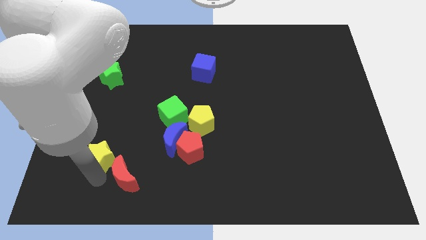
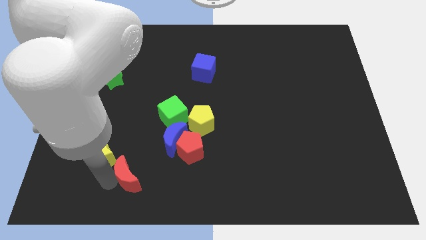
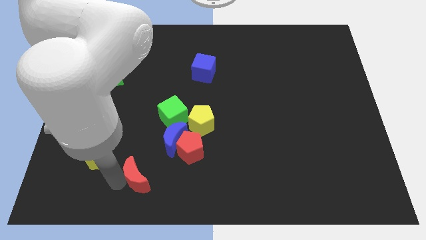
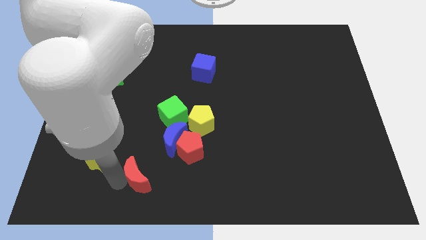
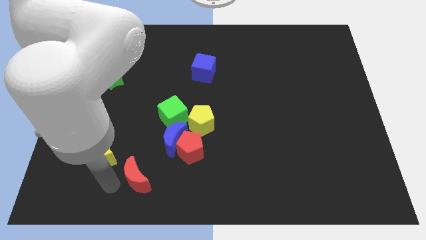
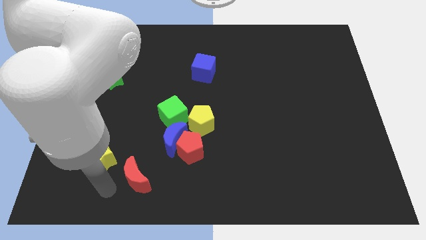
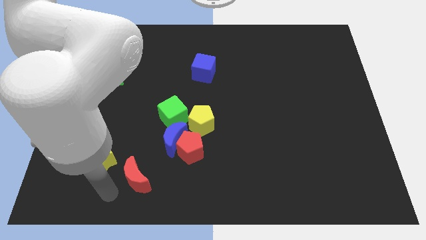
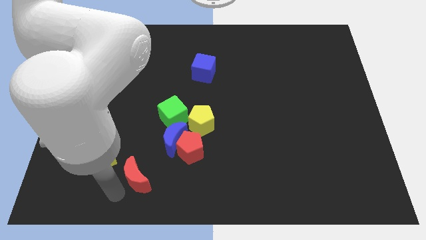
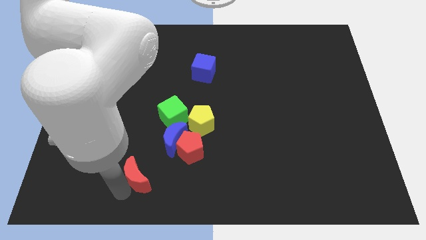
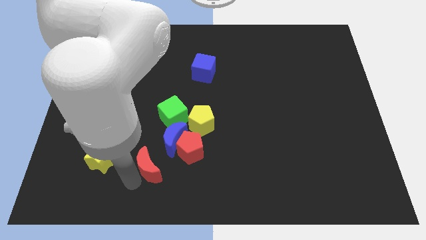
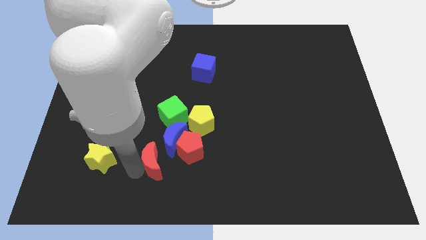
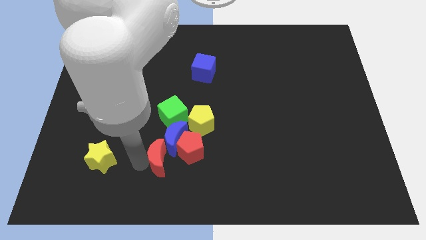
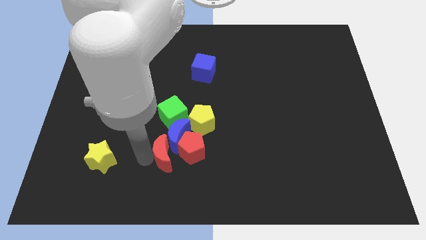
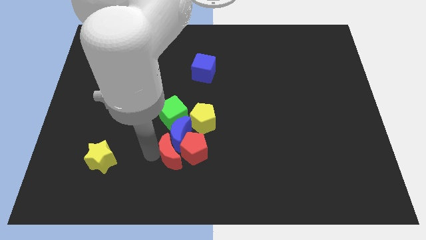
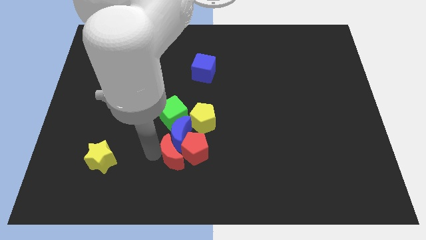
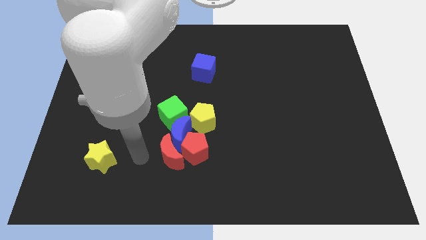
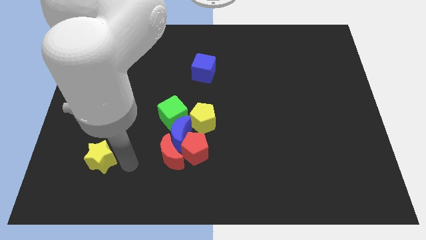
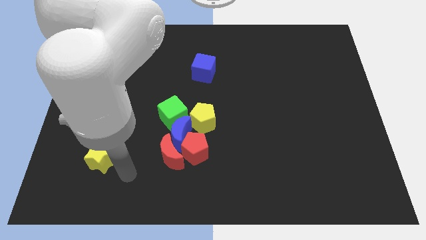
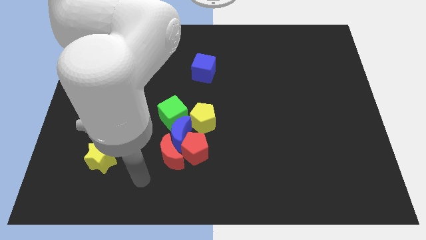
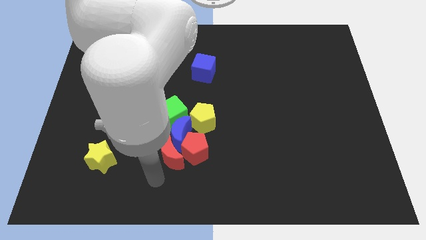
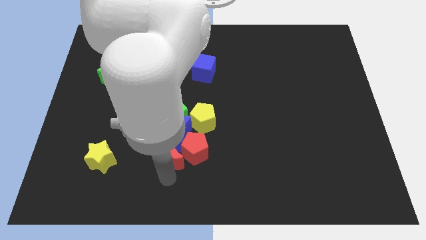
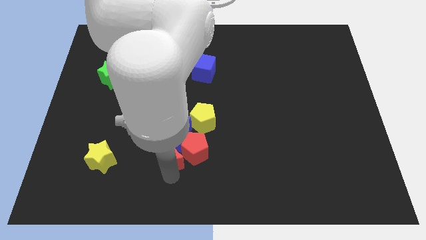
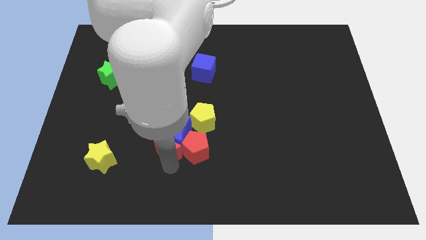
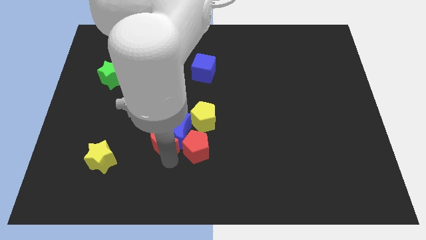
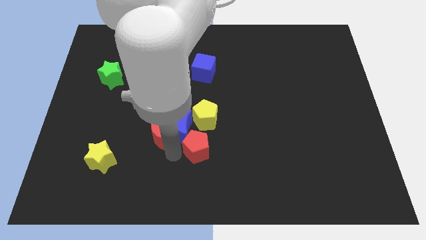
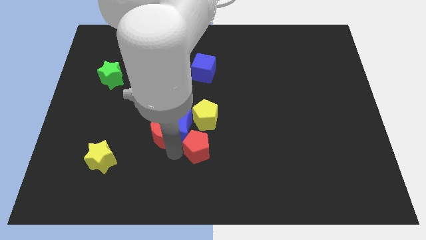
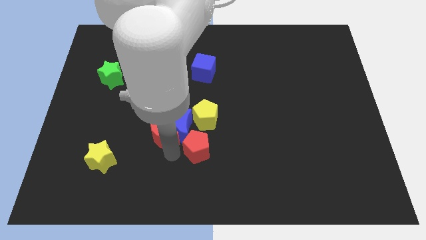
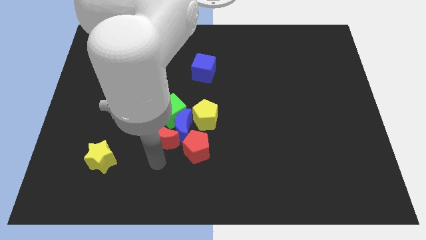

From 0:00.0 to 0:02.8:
separate red moon and yellow star

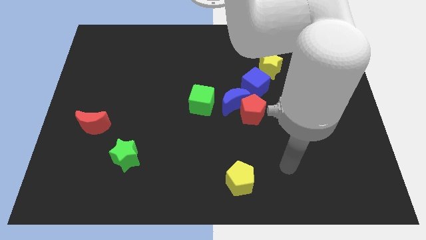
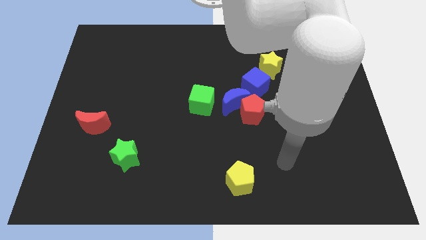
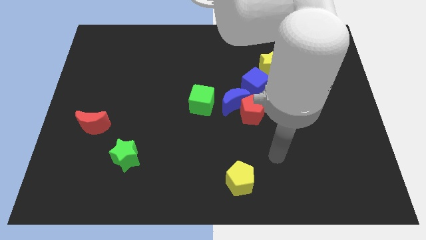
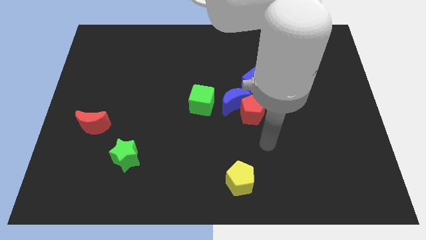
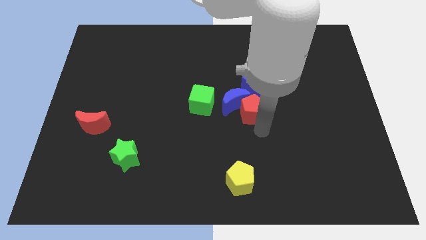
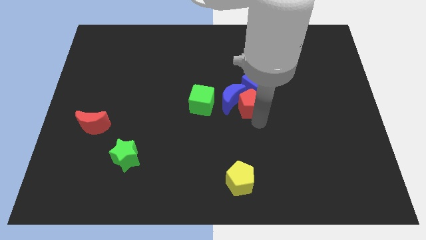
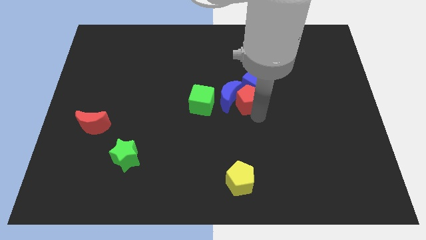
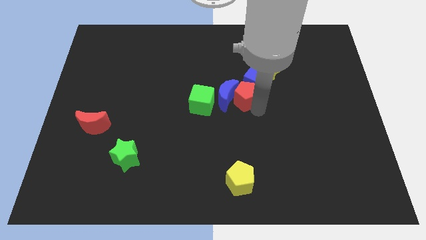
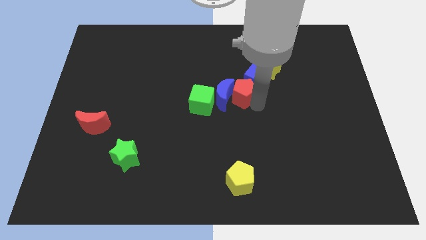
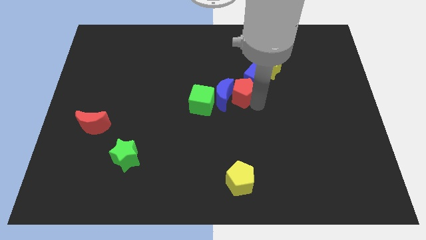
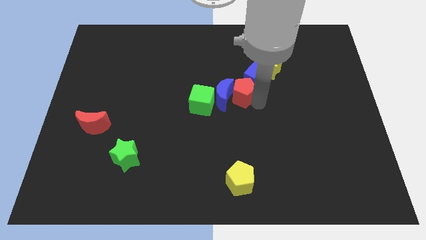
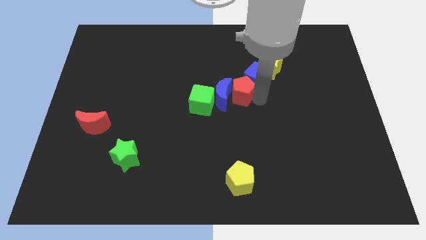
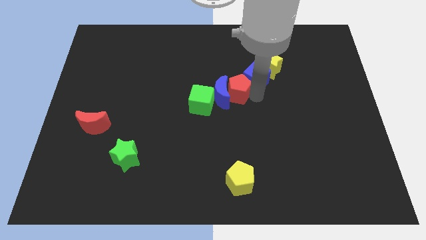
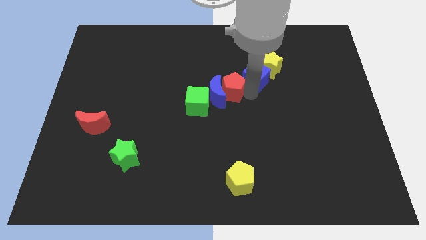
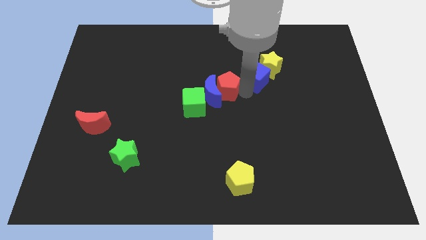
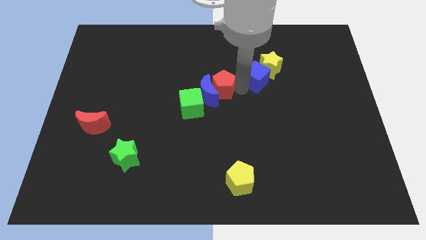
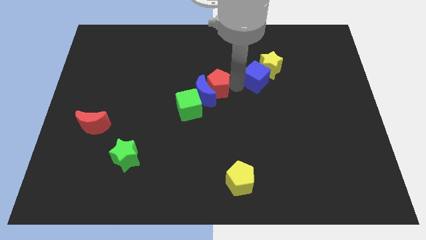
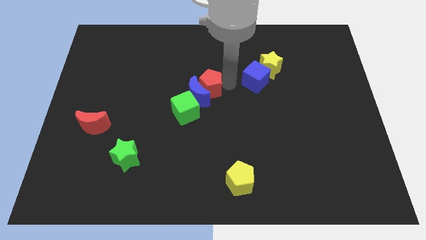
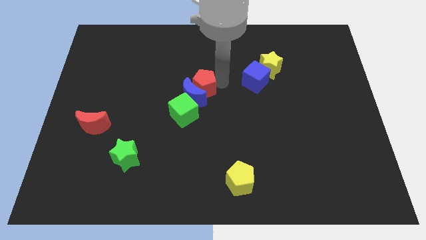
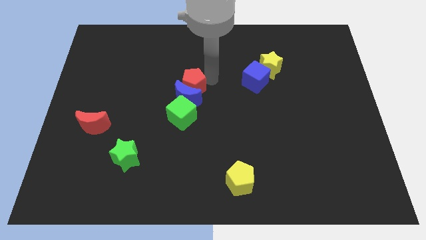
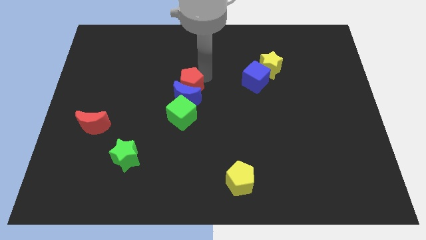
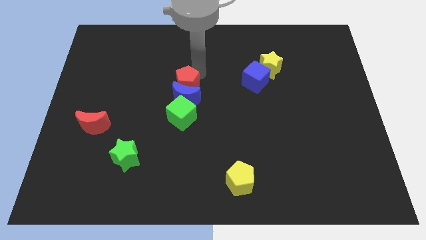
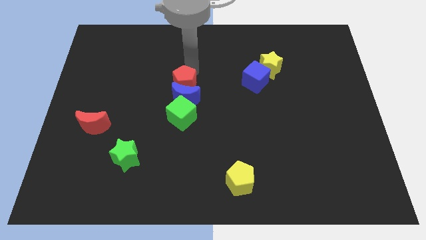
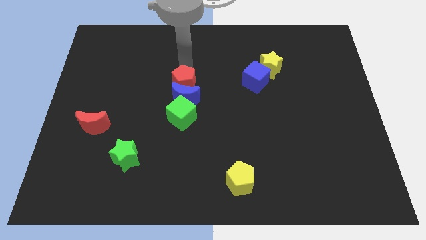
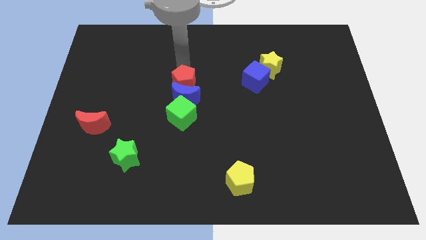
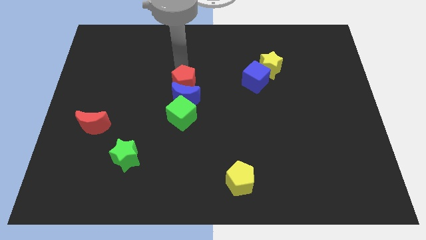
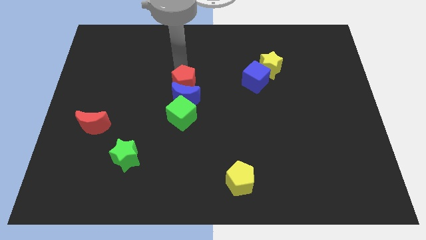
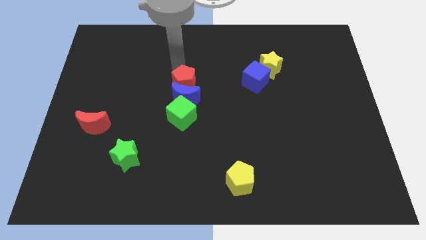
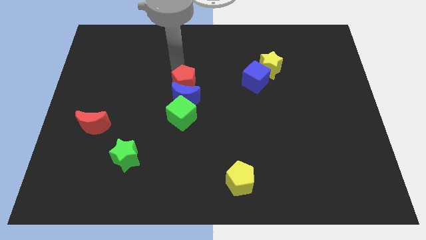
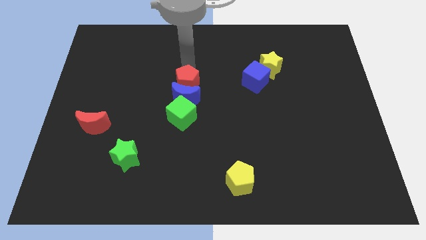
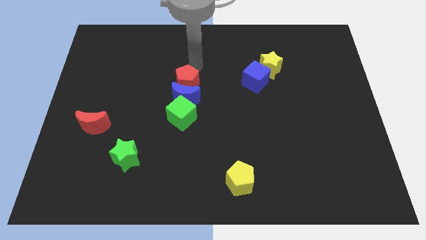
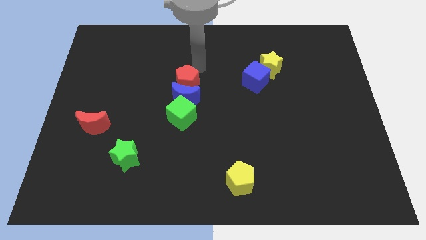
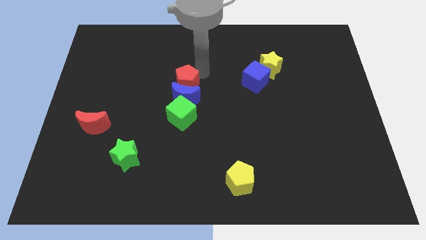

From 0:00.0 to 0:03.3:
push the red pentagon along with blue crescent to the top of the green cube

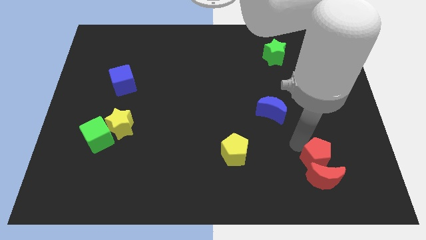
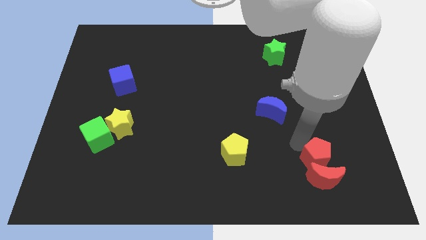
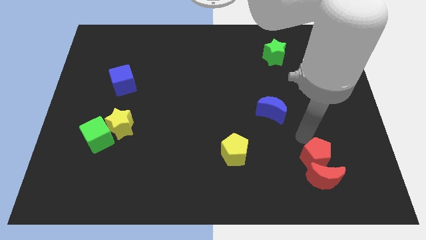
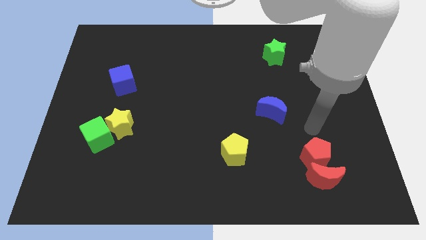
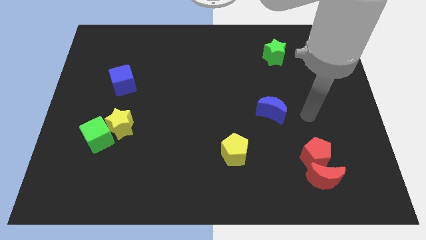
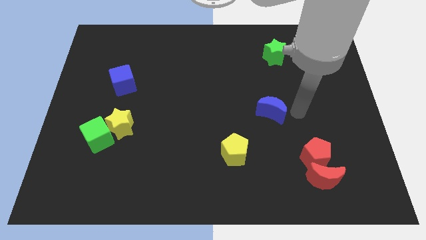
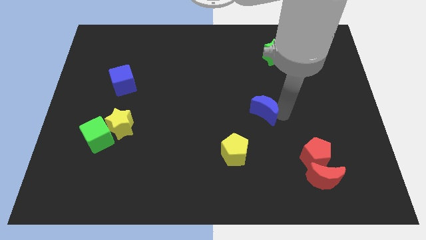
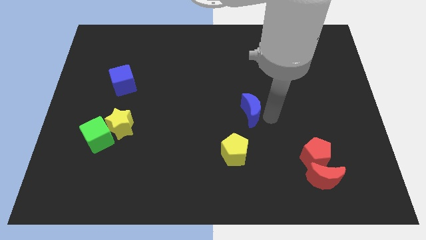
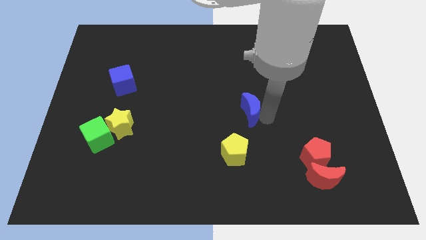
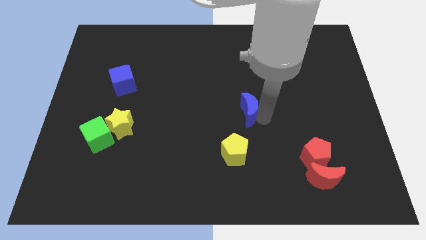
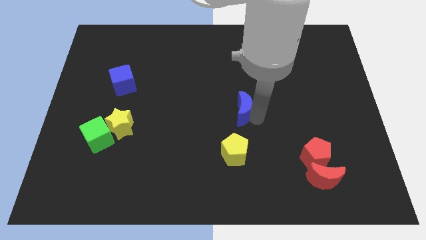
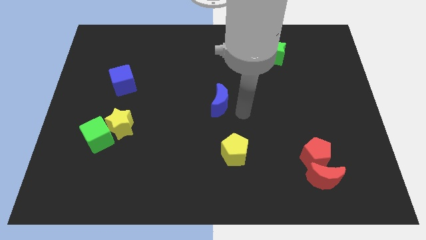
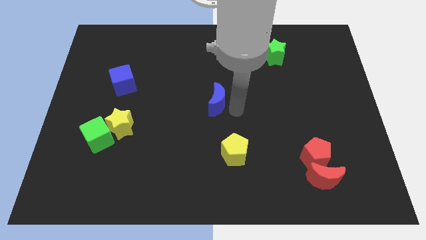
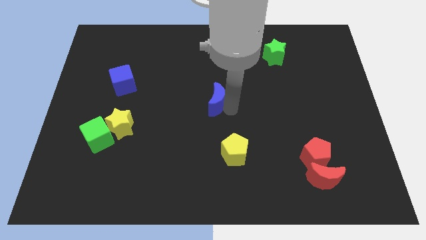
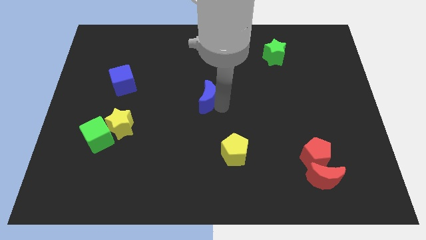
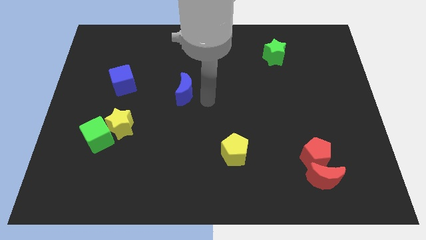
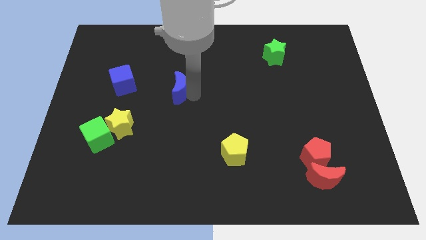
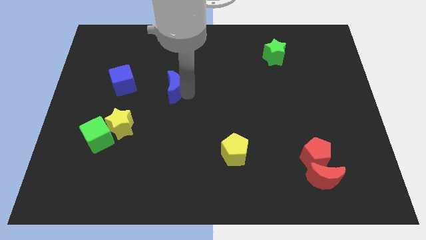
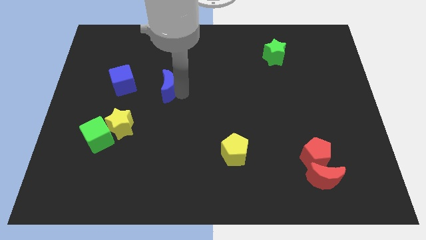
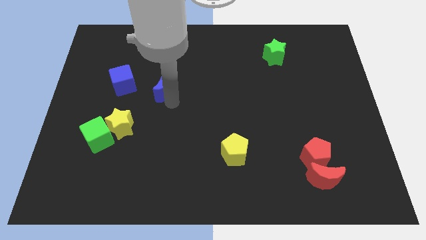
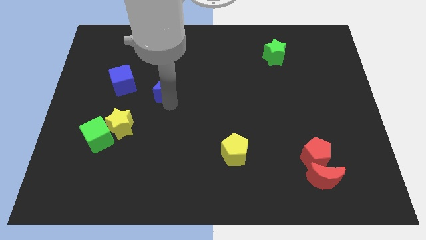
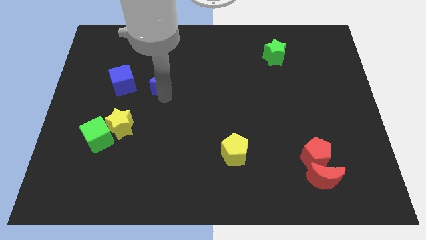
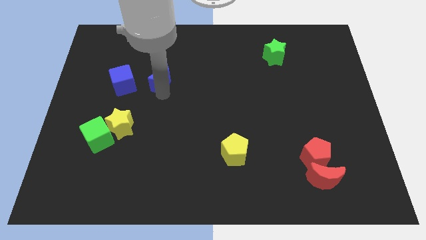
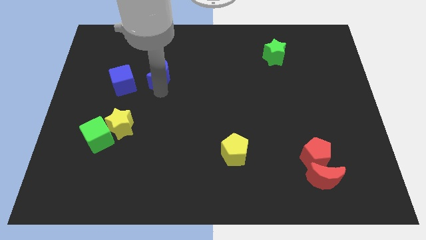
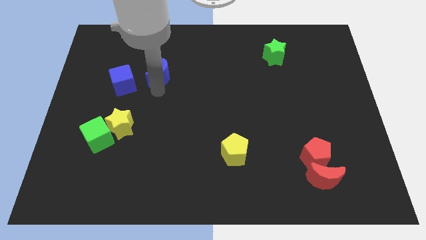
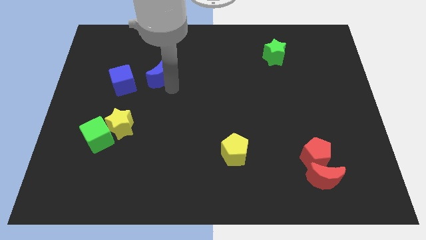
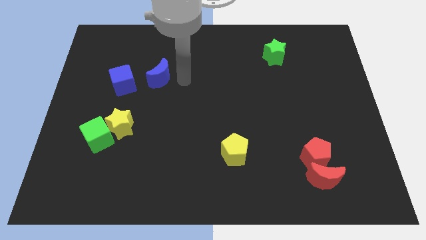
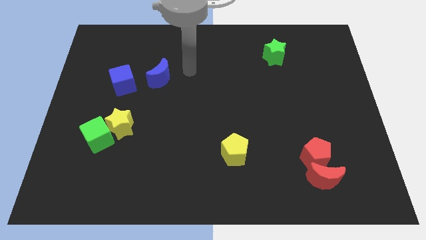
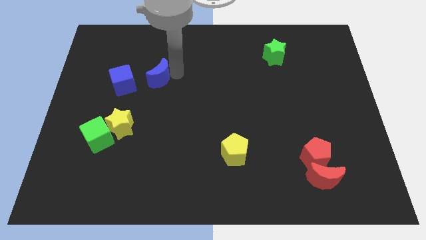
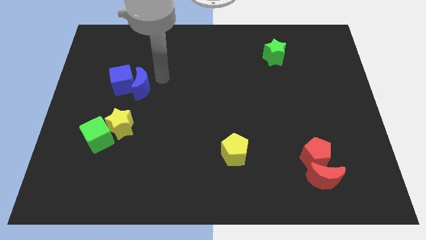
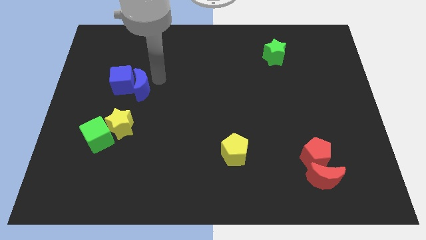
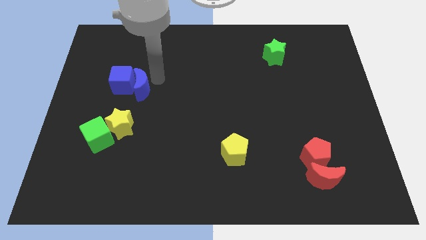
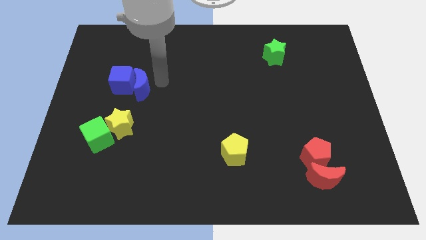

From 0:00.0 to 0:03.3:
push the blue moon into the blue cube
